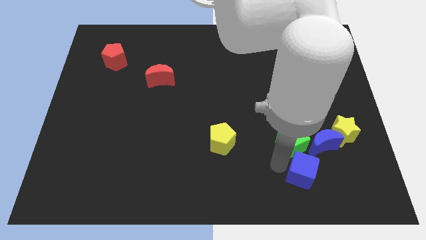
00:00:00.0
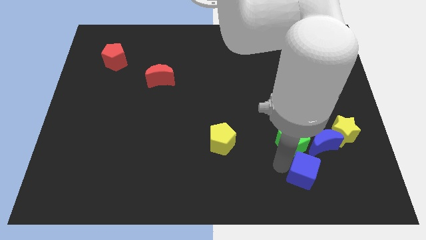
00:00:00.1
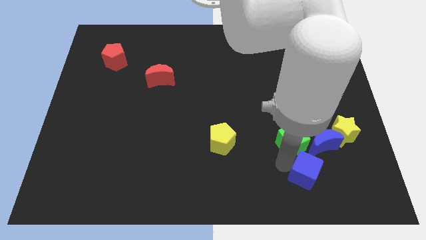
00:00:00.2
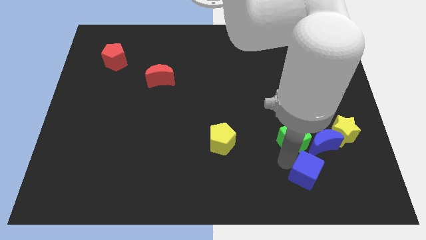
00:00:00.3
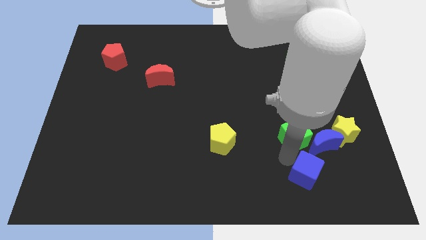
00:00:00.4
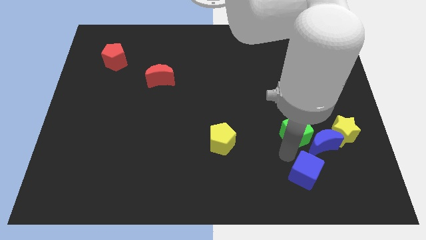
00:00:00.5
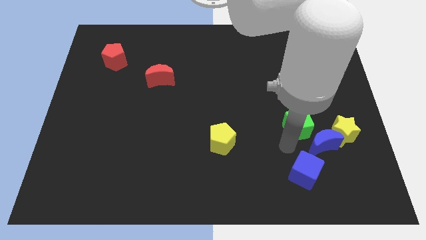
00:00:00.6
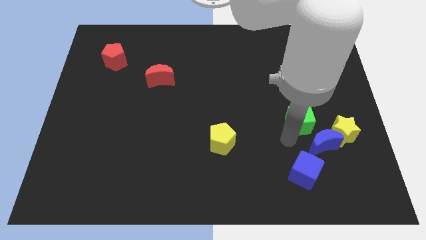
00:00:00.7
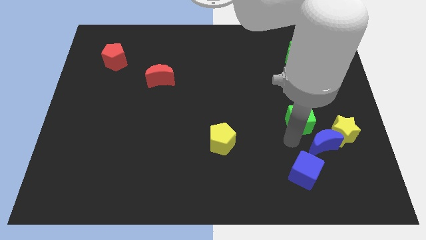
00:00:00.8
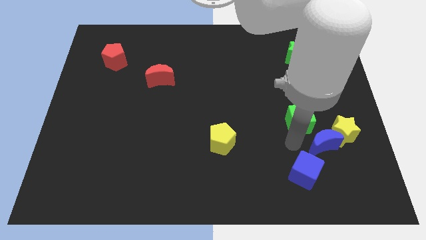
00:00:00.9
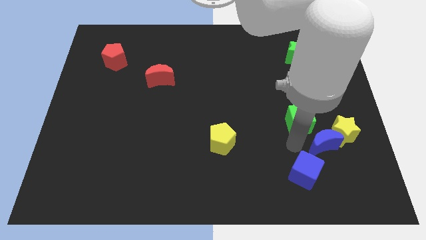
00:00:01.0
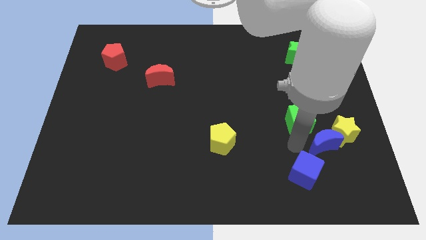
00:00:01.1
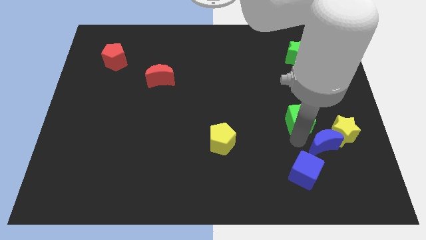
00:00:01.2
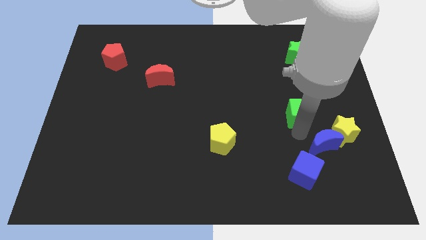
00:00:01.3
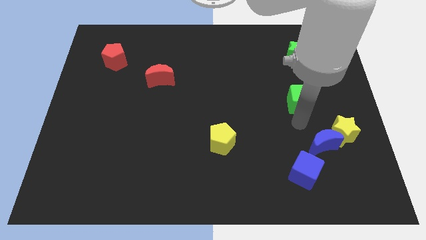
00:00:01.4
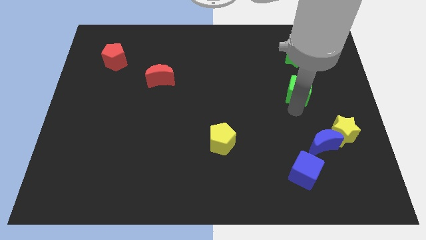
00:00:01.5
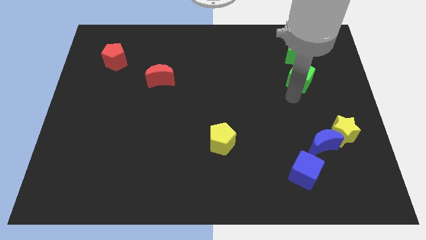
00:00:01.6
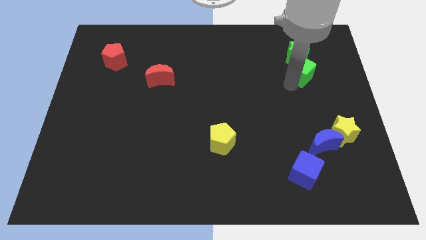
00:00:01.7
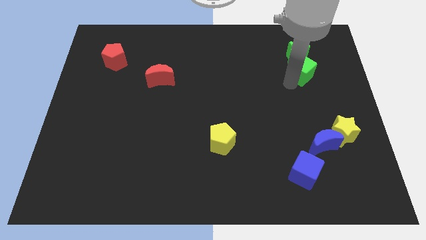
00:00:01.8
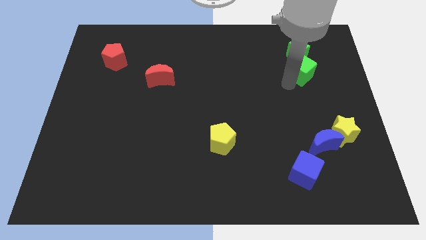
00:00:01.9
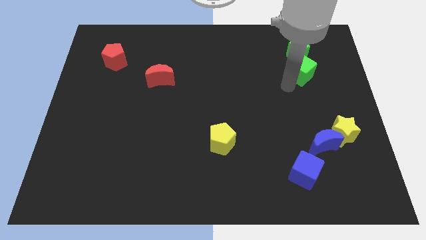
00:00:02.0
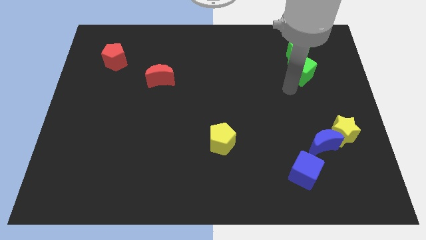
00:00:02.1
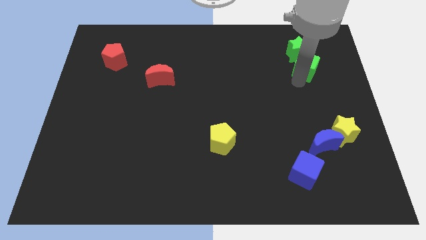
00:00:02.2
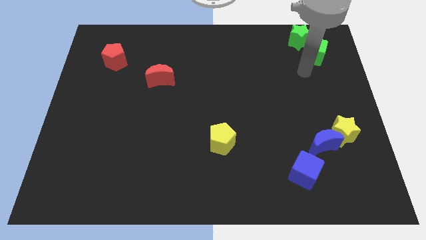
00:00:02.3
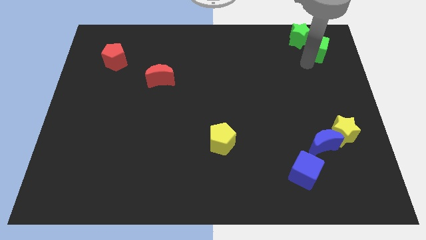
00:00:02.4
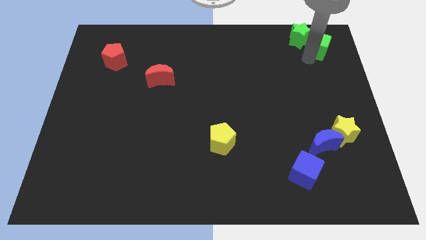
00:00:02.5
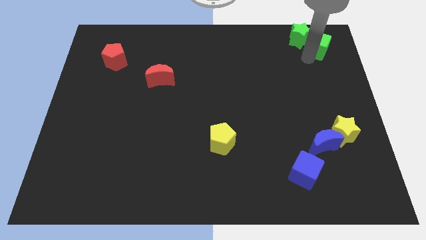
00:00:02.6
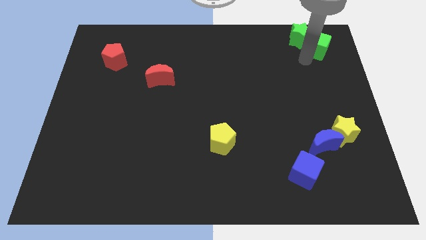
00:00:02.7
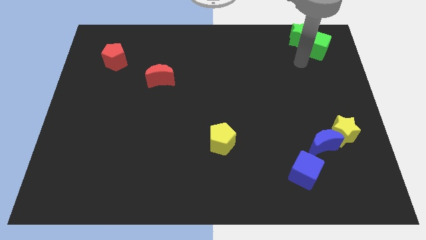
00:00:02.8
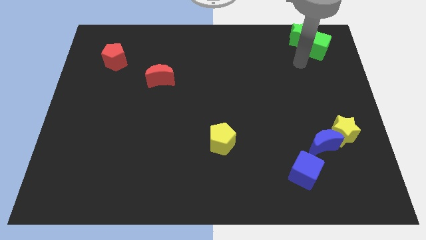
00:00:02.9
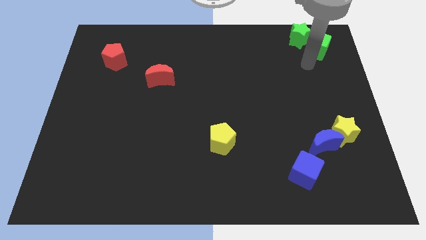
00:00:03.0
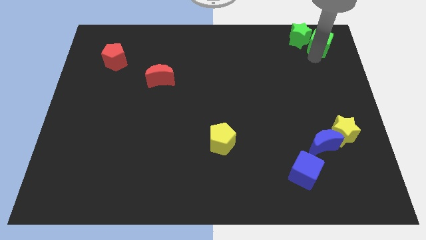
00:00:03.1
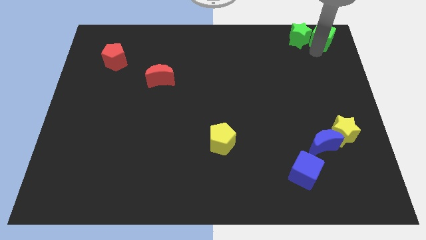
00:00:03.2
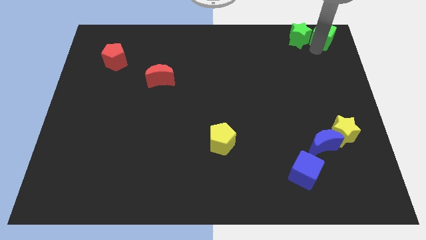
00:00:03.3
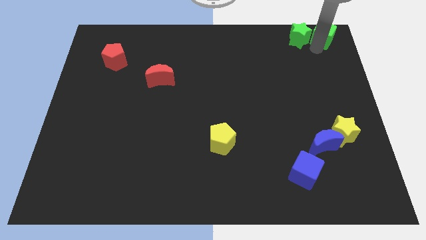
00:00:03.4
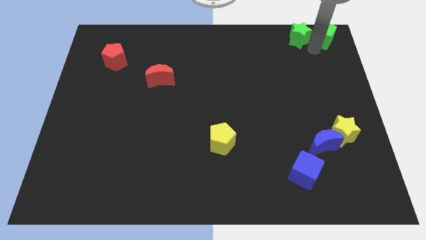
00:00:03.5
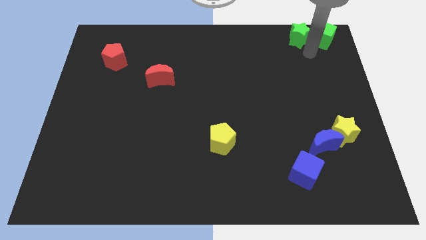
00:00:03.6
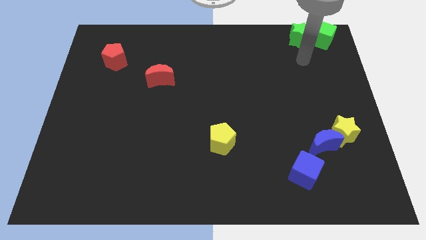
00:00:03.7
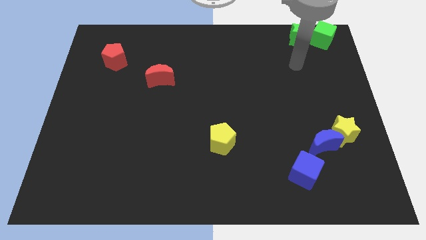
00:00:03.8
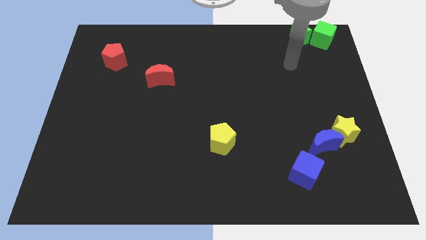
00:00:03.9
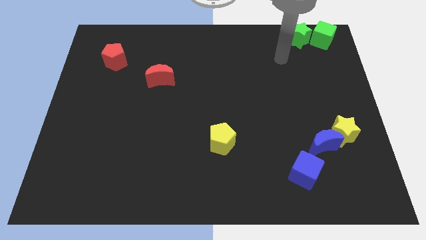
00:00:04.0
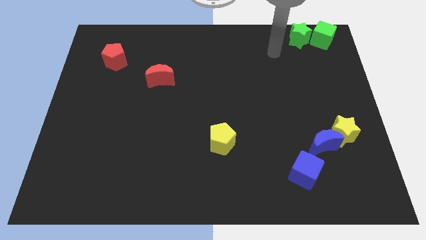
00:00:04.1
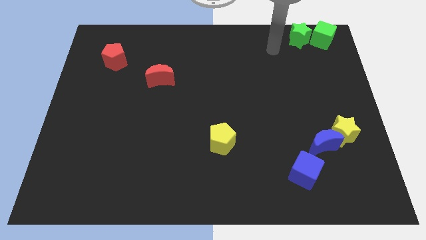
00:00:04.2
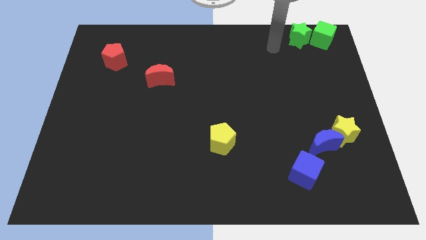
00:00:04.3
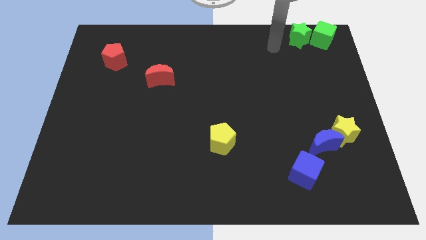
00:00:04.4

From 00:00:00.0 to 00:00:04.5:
place the green cube right to the green star

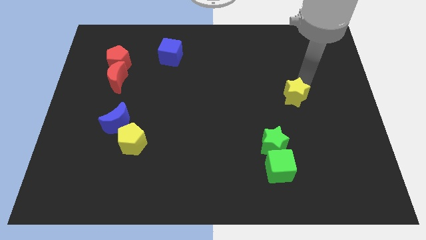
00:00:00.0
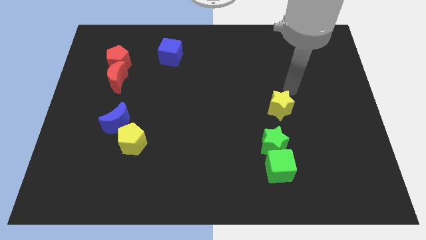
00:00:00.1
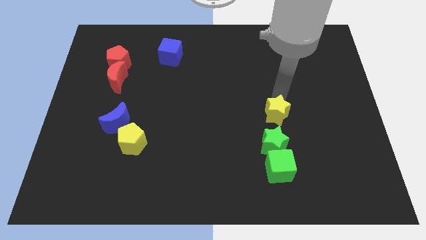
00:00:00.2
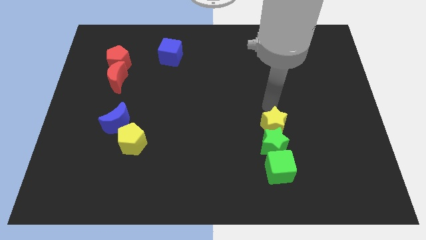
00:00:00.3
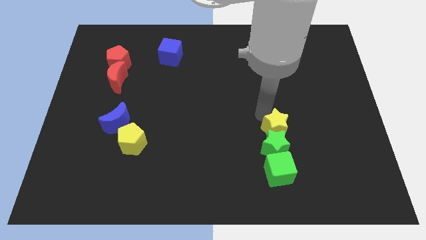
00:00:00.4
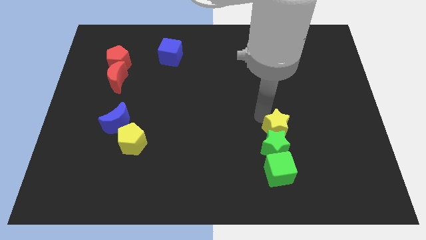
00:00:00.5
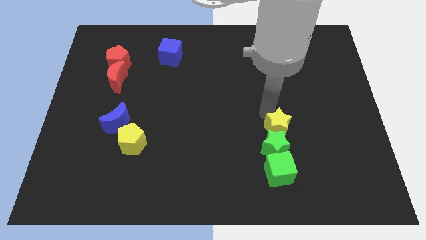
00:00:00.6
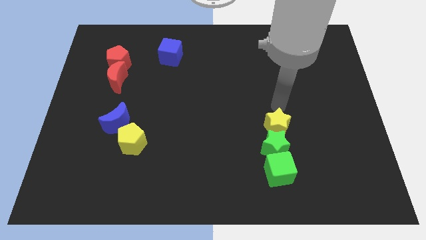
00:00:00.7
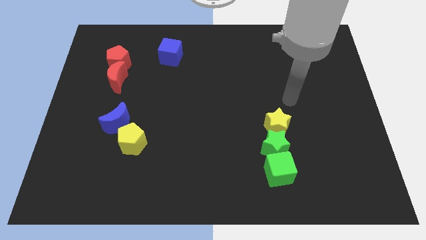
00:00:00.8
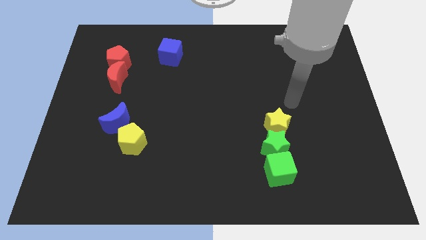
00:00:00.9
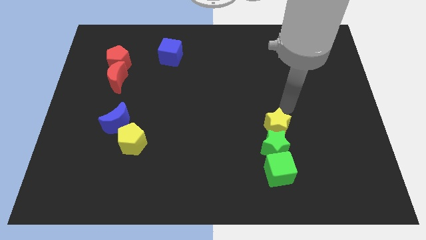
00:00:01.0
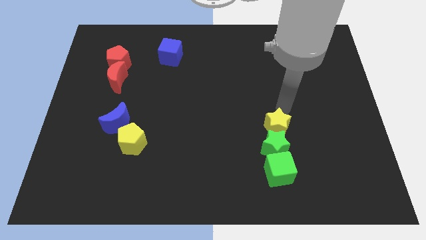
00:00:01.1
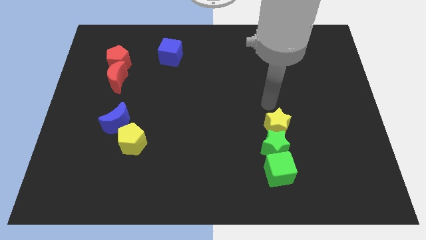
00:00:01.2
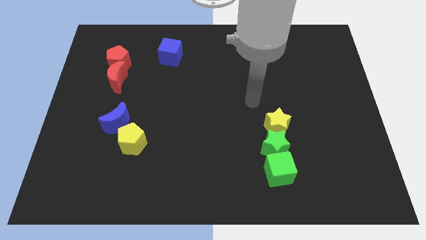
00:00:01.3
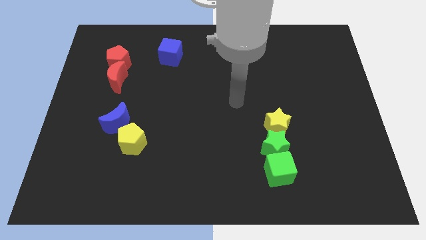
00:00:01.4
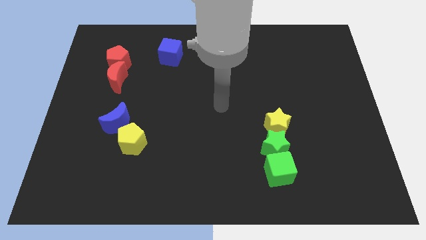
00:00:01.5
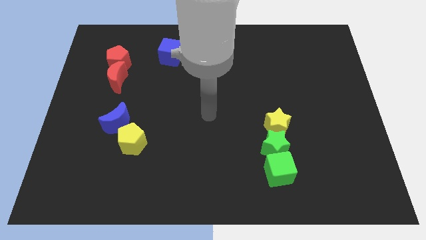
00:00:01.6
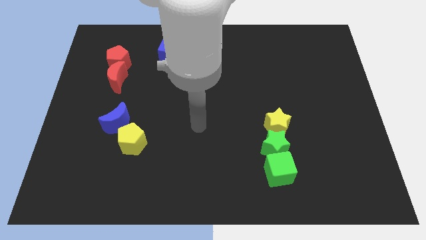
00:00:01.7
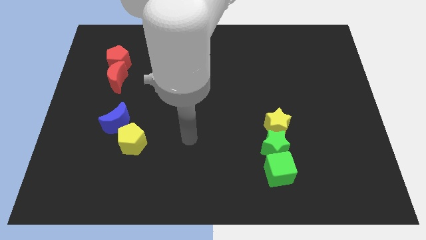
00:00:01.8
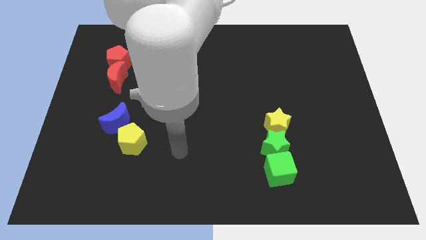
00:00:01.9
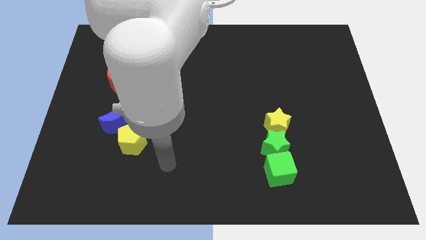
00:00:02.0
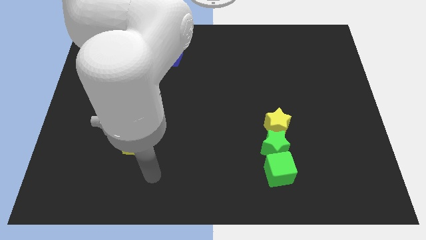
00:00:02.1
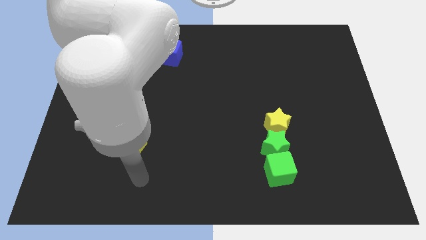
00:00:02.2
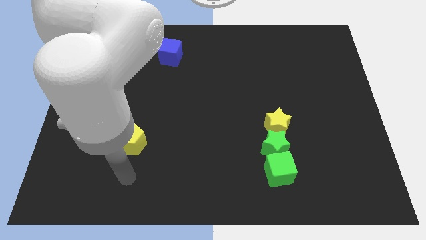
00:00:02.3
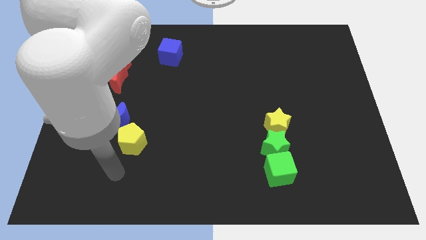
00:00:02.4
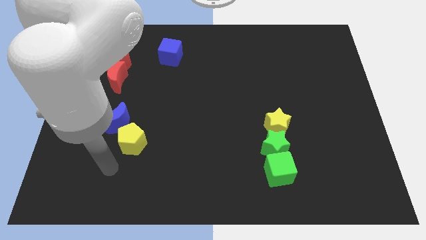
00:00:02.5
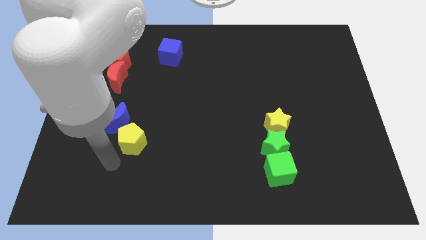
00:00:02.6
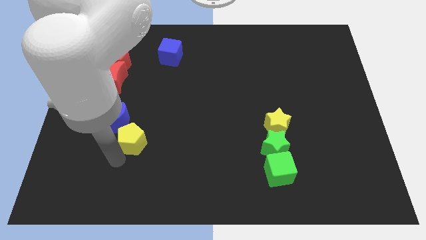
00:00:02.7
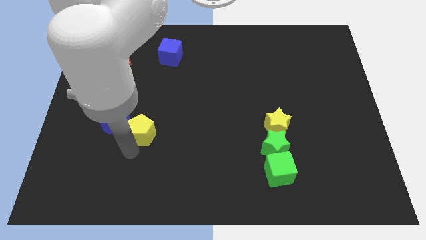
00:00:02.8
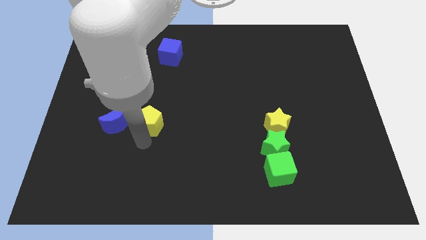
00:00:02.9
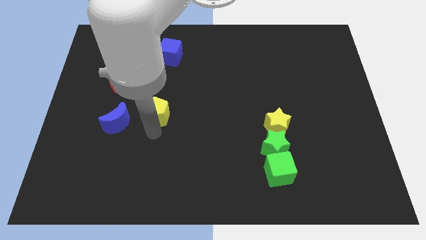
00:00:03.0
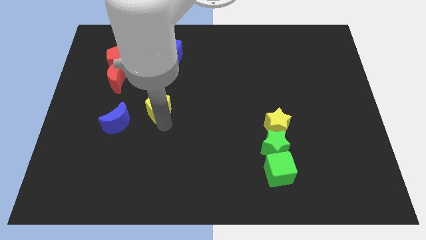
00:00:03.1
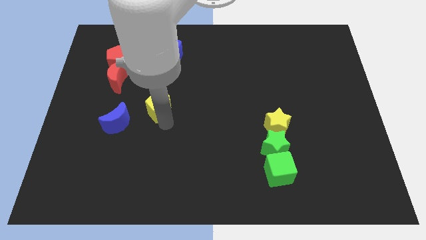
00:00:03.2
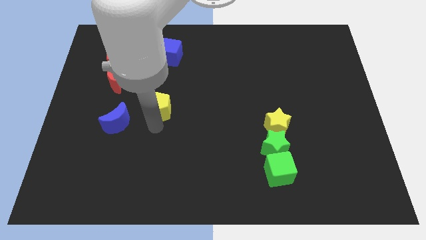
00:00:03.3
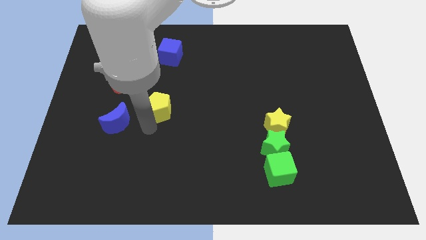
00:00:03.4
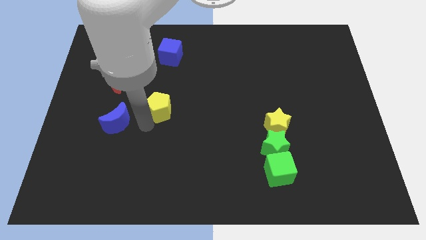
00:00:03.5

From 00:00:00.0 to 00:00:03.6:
place the yellow pentagon right to the blue moon

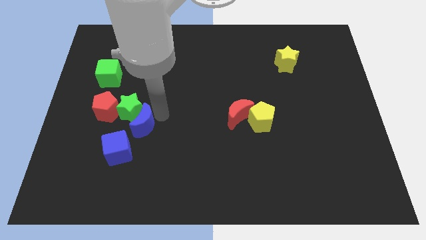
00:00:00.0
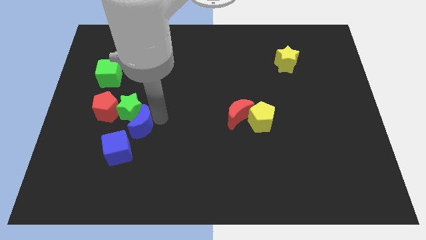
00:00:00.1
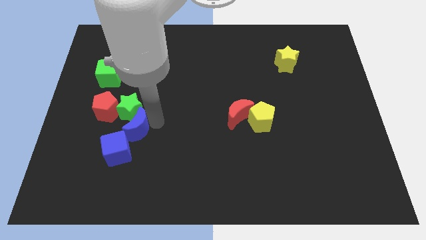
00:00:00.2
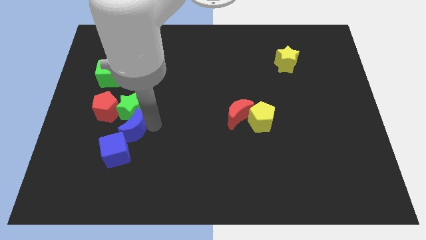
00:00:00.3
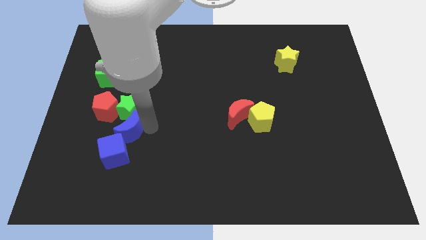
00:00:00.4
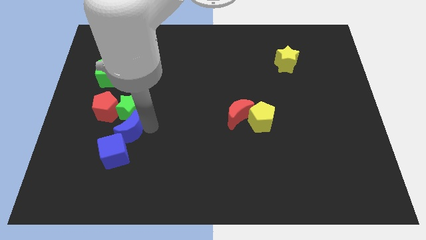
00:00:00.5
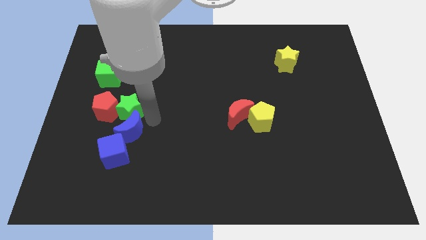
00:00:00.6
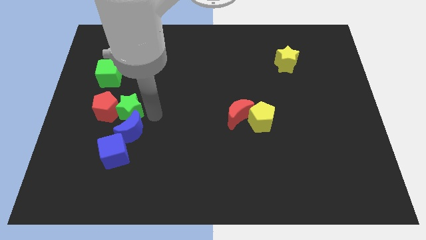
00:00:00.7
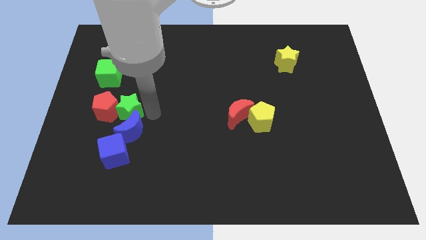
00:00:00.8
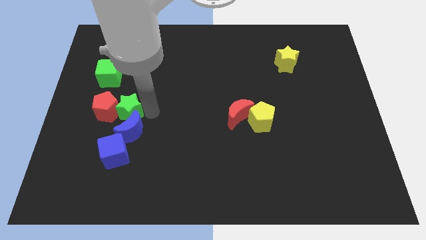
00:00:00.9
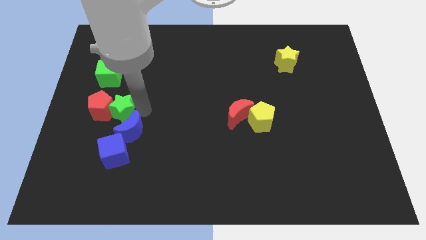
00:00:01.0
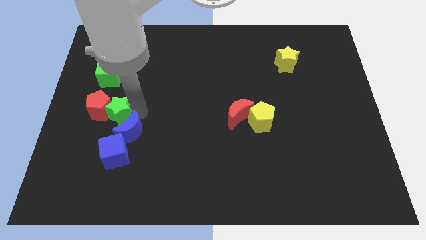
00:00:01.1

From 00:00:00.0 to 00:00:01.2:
move the blue moon to the bottom of the green star
